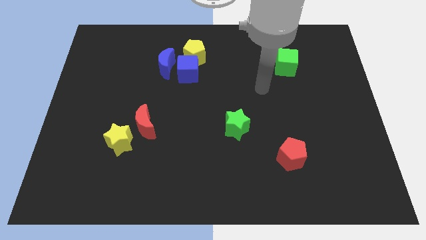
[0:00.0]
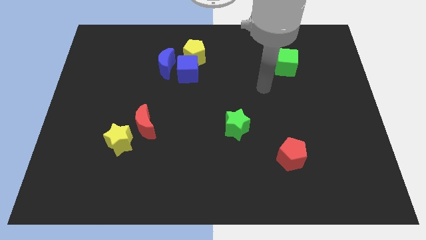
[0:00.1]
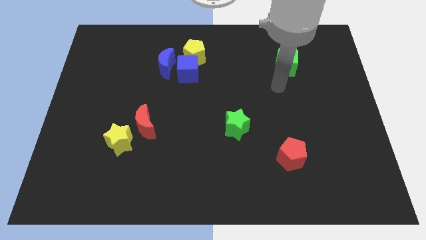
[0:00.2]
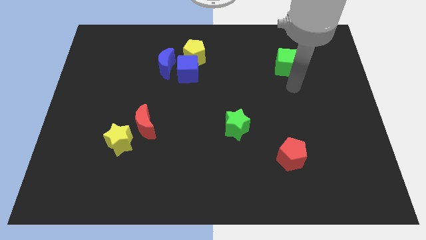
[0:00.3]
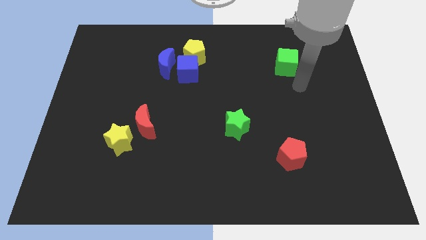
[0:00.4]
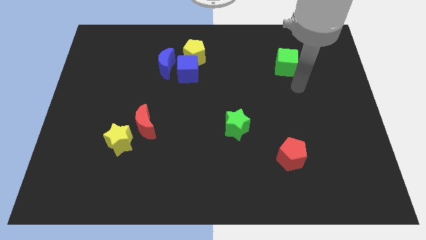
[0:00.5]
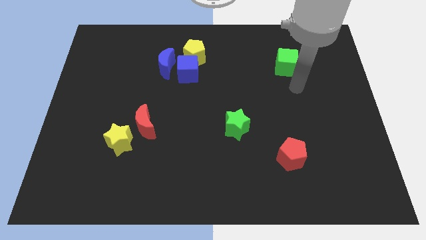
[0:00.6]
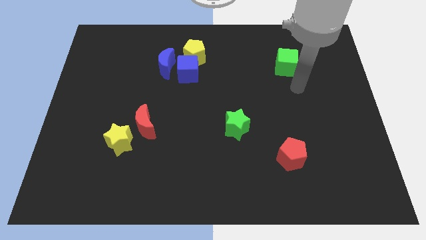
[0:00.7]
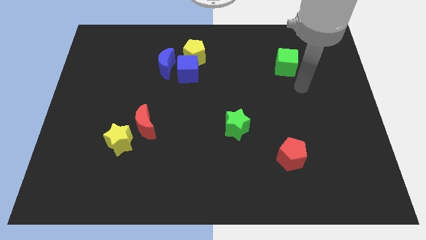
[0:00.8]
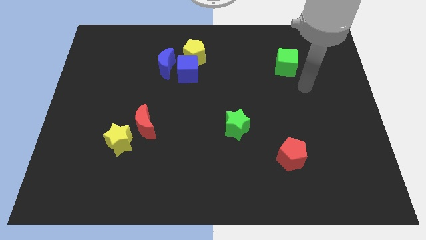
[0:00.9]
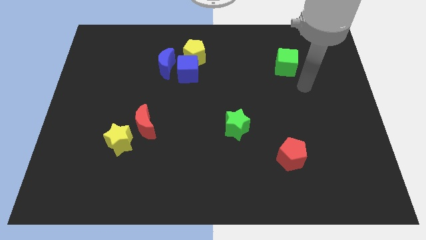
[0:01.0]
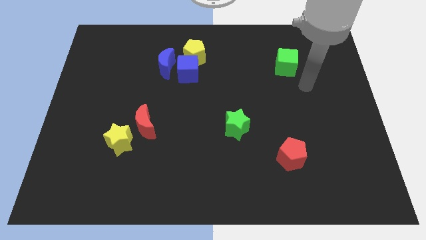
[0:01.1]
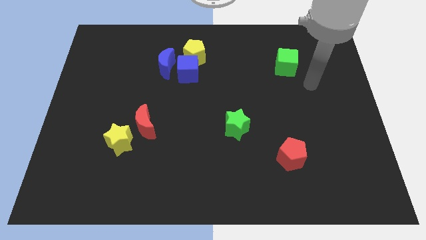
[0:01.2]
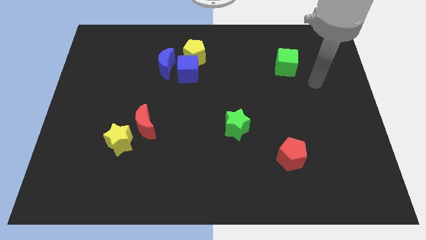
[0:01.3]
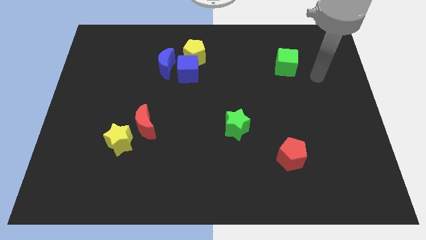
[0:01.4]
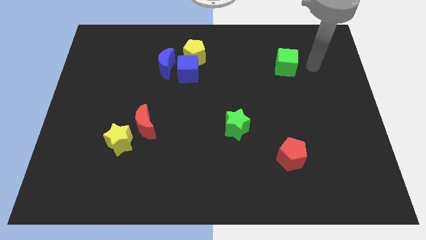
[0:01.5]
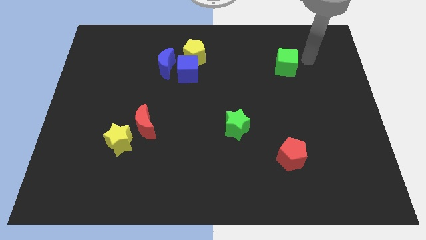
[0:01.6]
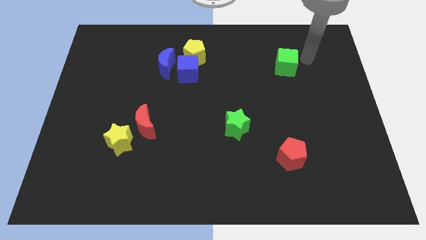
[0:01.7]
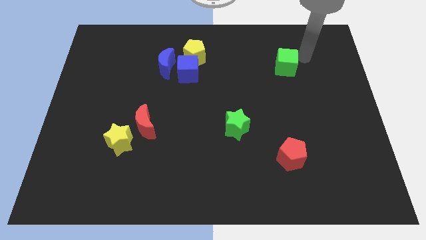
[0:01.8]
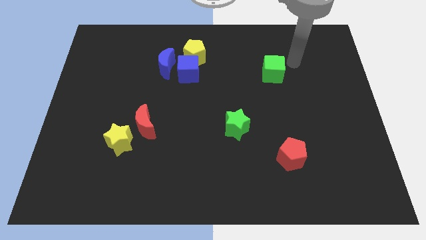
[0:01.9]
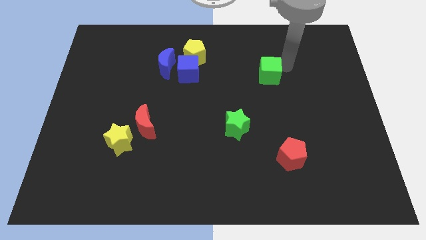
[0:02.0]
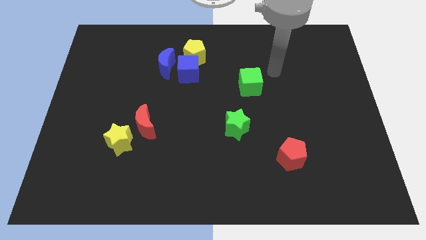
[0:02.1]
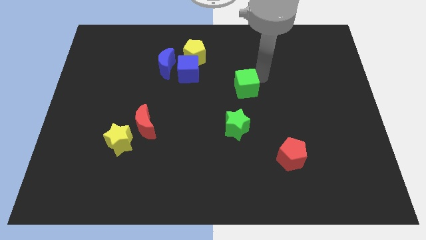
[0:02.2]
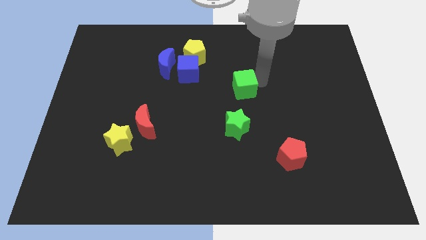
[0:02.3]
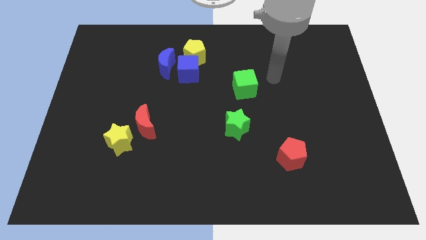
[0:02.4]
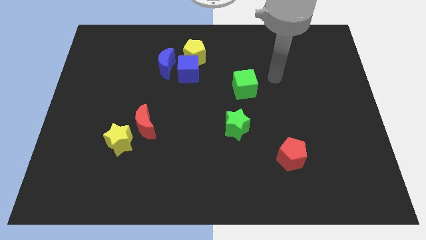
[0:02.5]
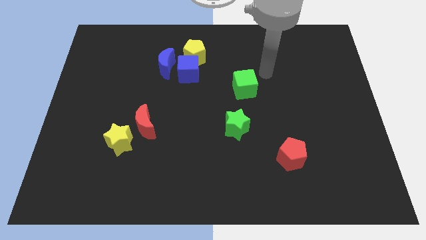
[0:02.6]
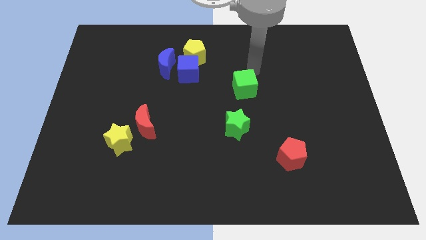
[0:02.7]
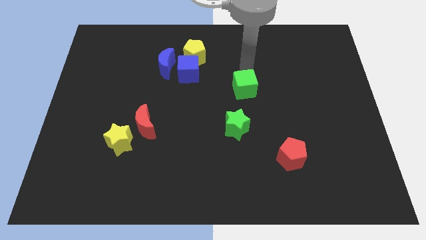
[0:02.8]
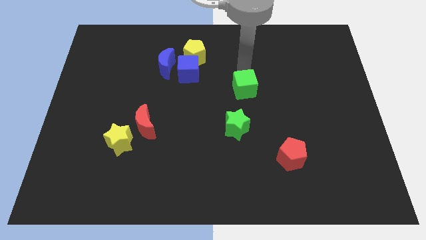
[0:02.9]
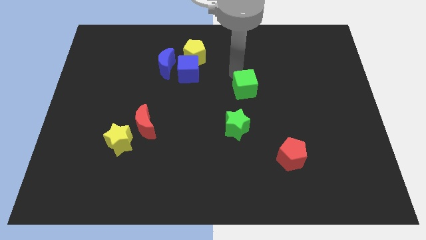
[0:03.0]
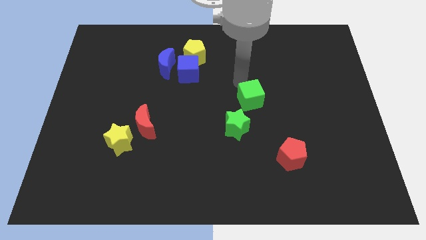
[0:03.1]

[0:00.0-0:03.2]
place the green cube above the green star

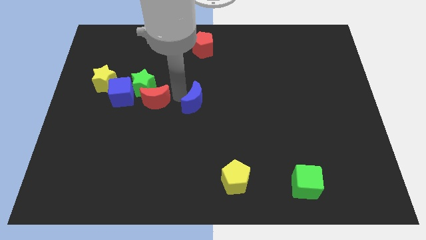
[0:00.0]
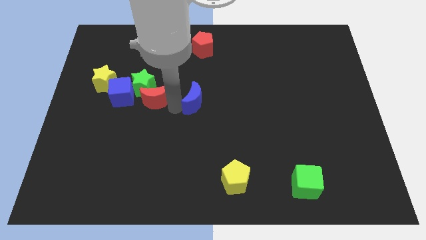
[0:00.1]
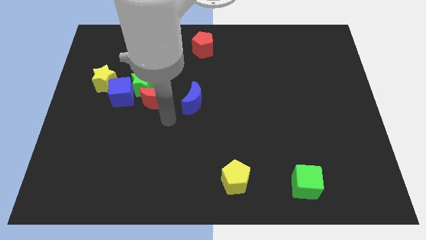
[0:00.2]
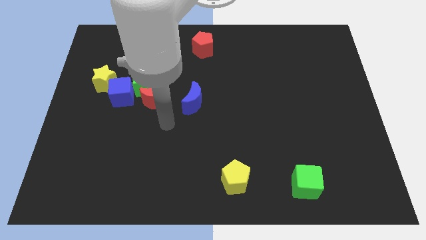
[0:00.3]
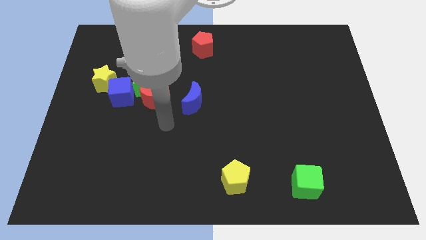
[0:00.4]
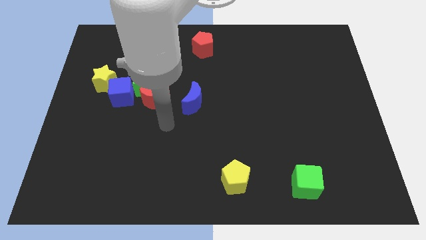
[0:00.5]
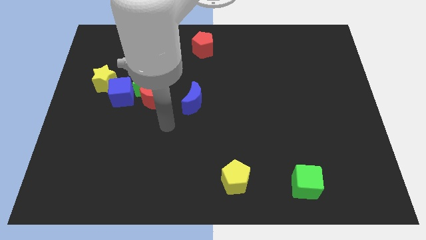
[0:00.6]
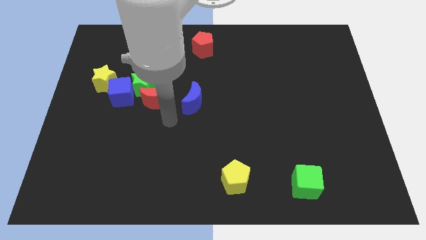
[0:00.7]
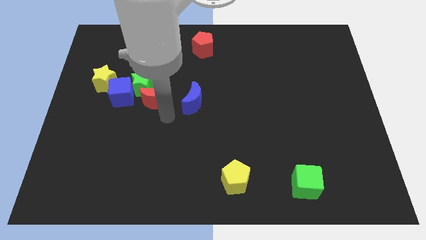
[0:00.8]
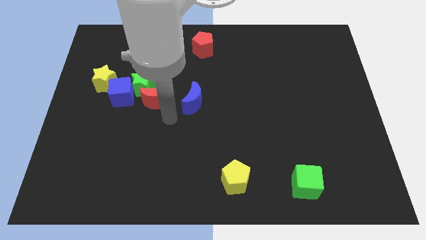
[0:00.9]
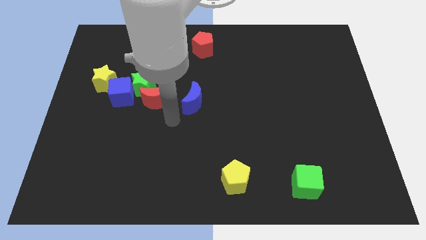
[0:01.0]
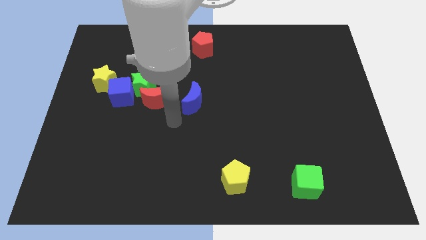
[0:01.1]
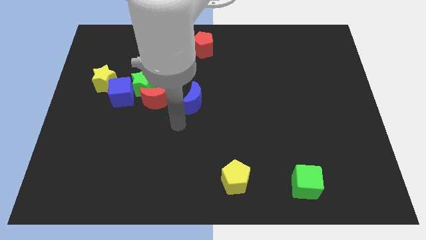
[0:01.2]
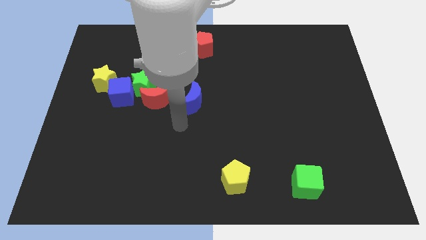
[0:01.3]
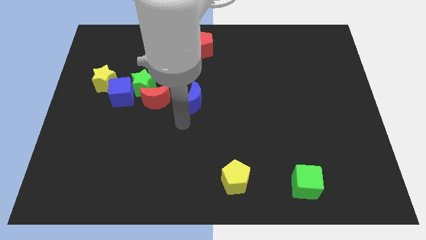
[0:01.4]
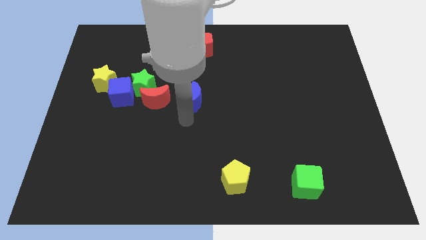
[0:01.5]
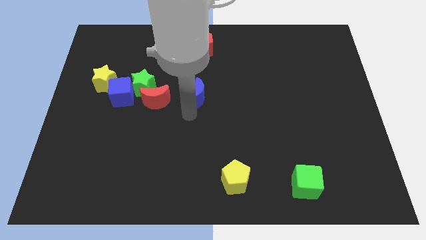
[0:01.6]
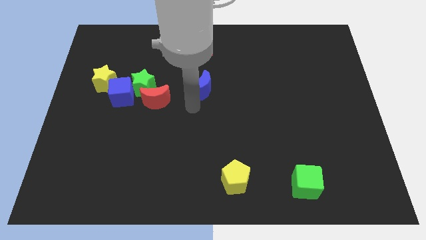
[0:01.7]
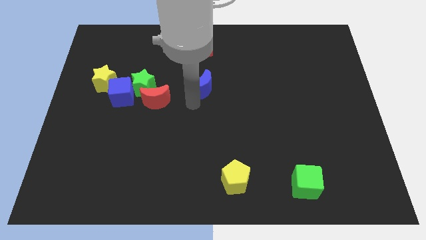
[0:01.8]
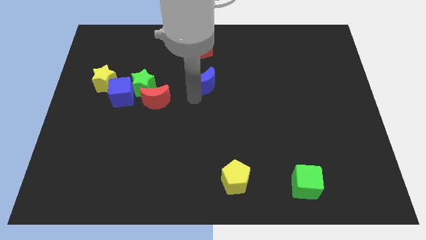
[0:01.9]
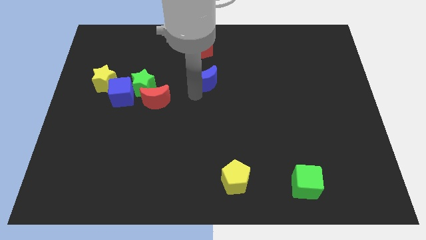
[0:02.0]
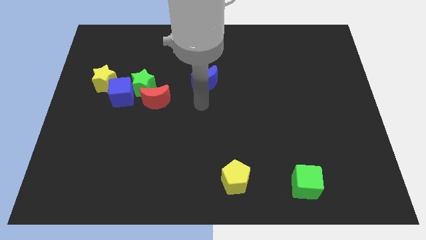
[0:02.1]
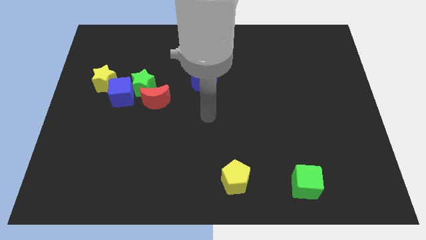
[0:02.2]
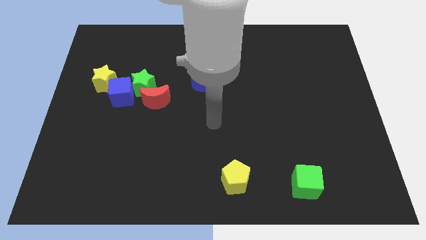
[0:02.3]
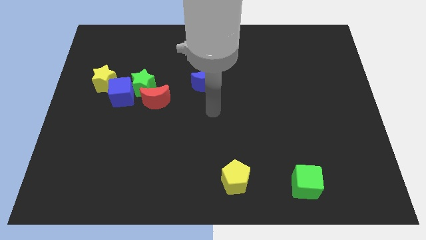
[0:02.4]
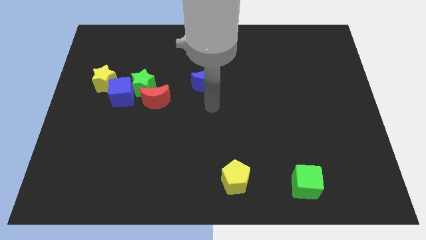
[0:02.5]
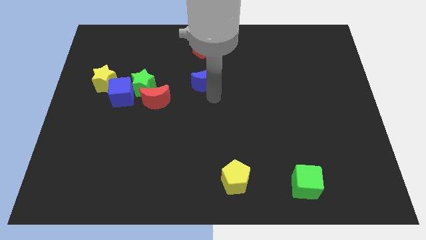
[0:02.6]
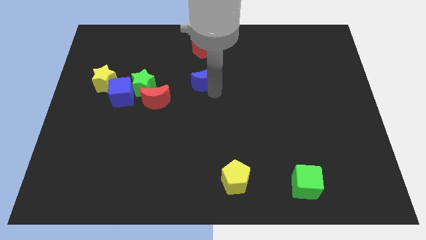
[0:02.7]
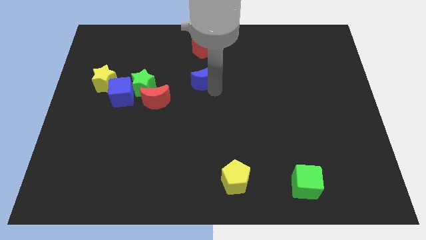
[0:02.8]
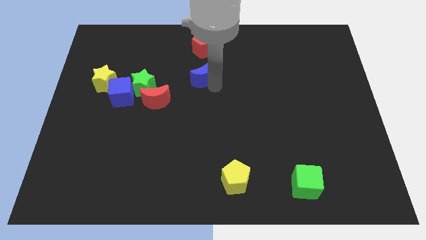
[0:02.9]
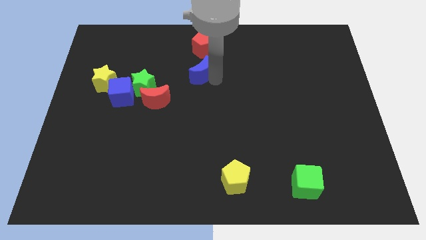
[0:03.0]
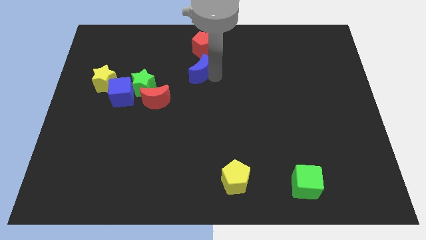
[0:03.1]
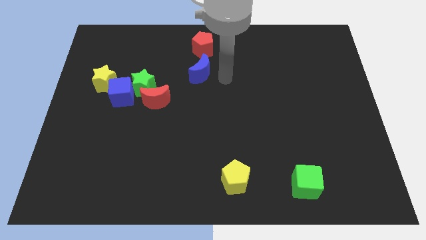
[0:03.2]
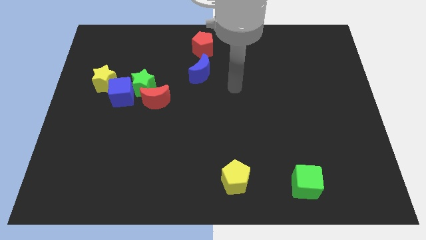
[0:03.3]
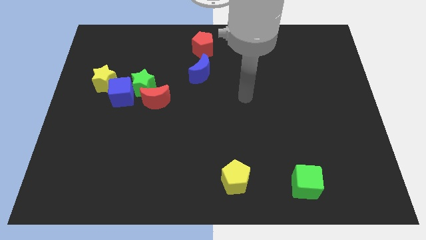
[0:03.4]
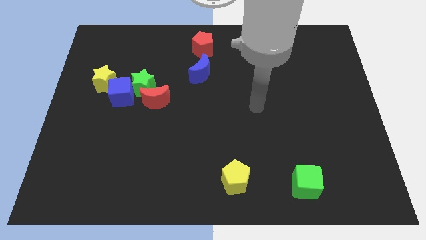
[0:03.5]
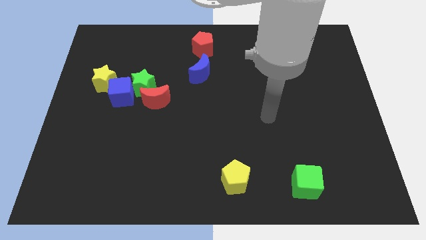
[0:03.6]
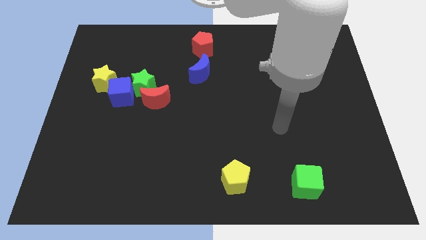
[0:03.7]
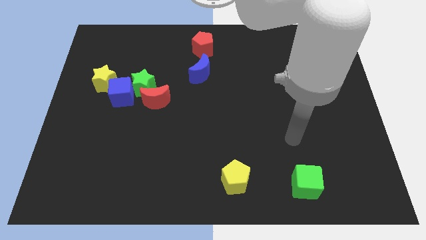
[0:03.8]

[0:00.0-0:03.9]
place blue cube to the bottom of red pentagon

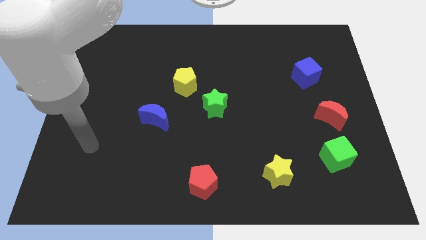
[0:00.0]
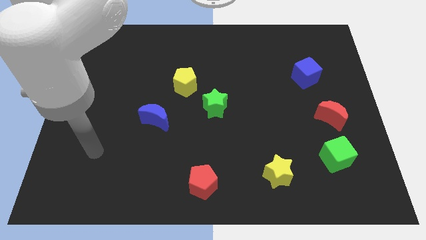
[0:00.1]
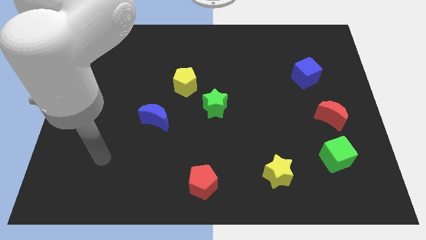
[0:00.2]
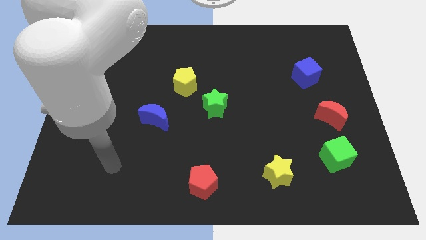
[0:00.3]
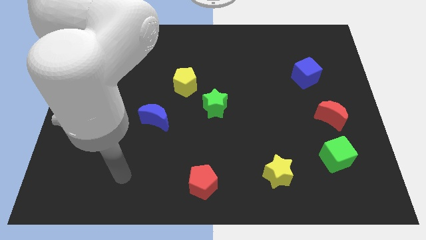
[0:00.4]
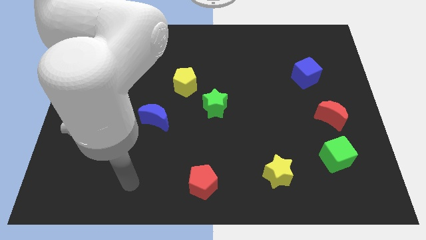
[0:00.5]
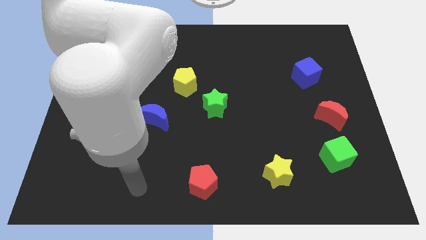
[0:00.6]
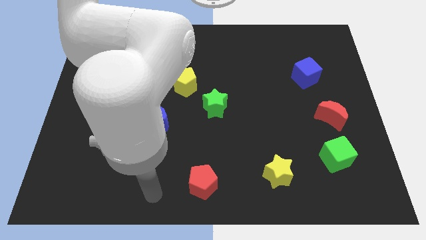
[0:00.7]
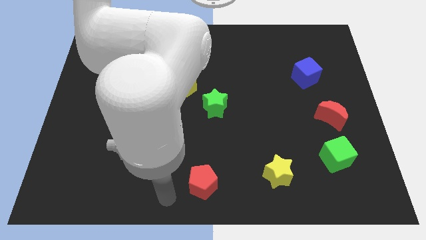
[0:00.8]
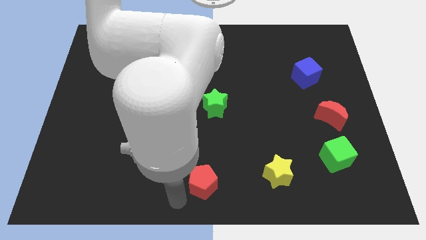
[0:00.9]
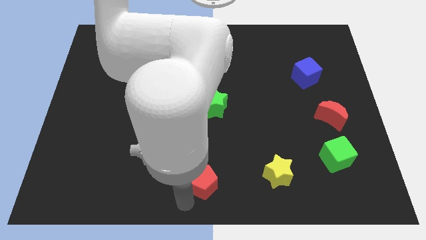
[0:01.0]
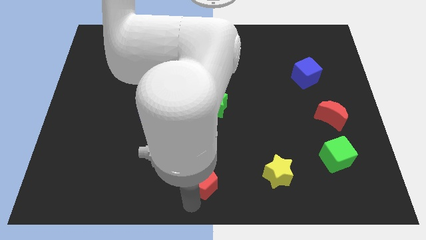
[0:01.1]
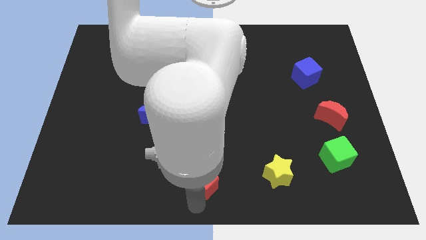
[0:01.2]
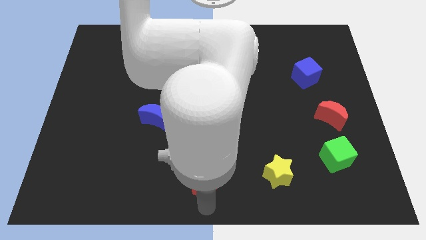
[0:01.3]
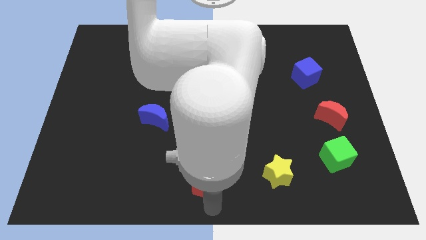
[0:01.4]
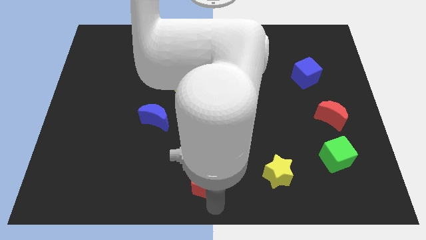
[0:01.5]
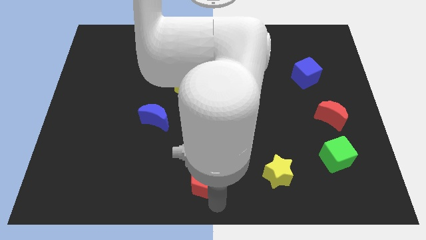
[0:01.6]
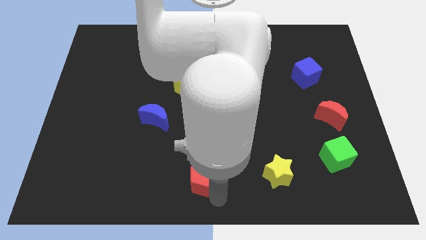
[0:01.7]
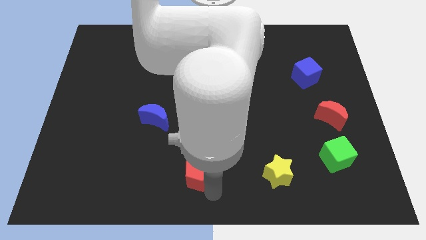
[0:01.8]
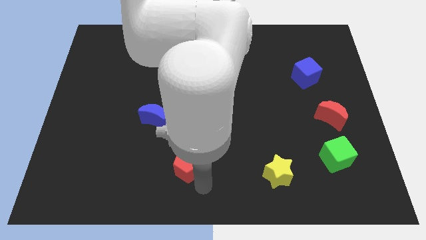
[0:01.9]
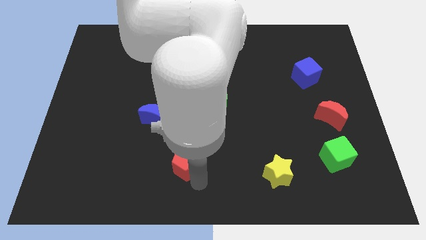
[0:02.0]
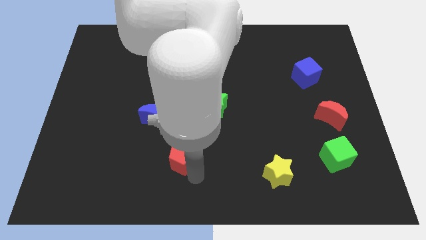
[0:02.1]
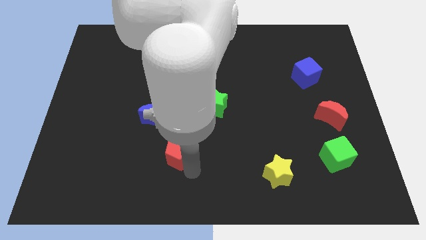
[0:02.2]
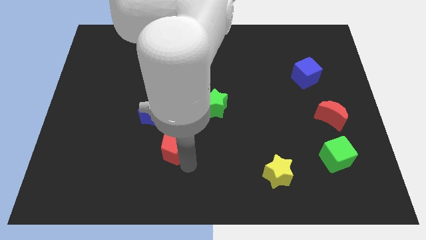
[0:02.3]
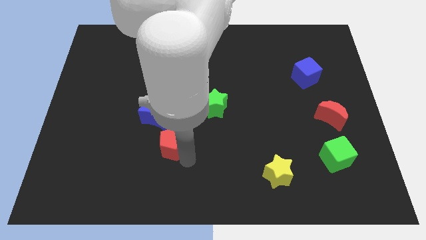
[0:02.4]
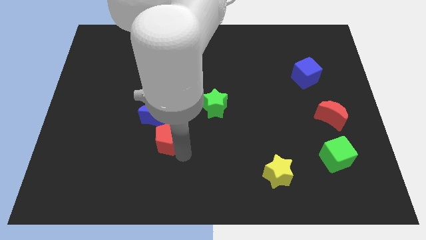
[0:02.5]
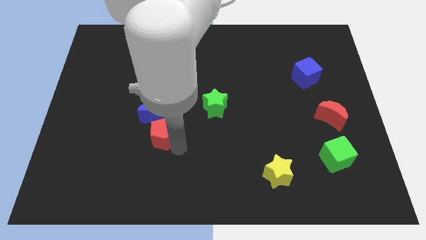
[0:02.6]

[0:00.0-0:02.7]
push the red pentagon to the bottom side of the blue crescent
